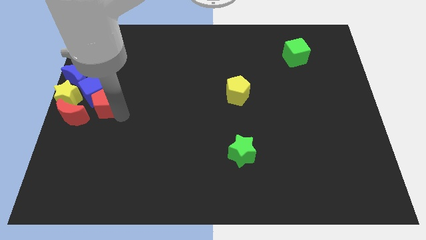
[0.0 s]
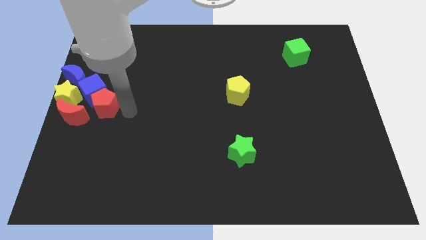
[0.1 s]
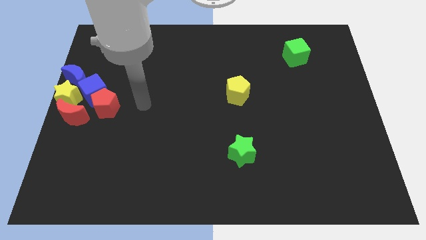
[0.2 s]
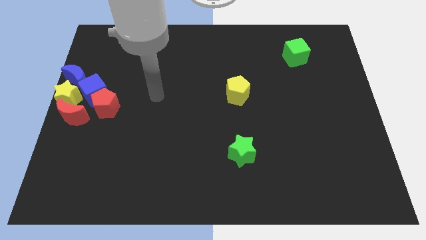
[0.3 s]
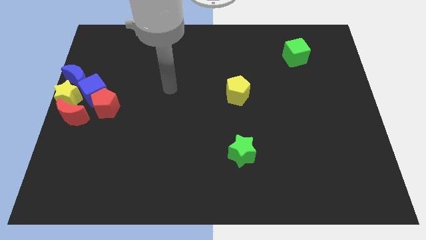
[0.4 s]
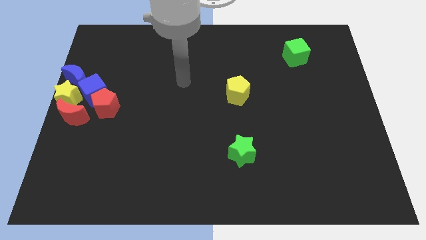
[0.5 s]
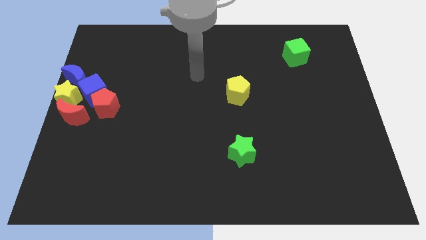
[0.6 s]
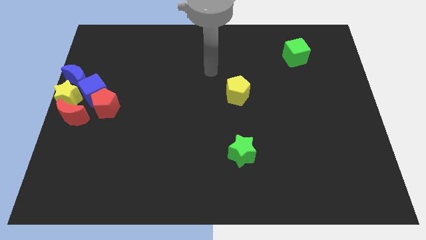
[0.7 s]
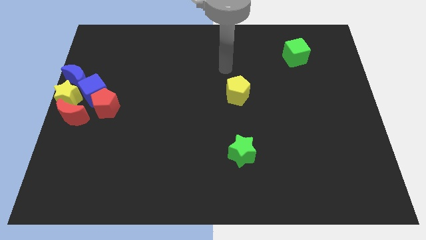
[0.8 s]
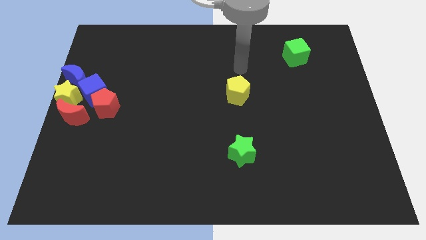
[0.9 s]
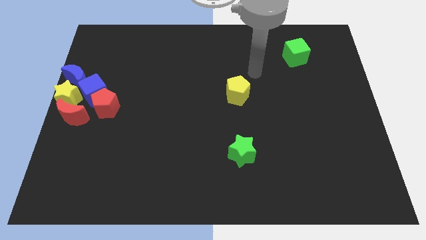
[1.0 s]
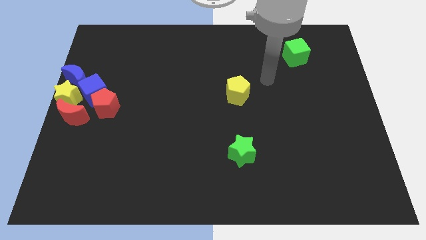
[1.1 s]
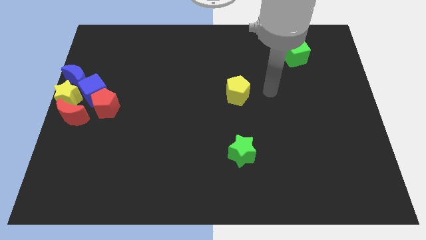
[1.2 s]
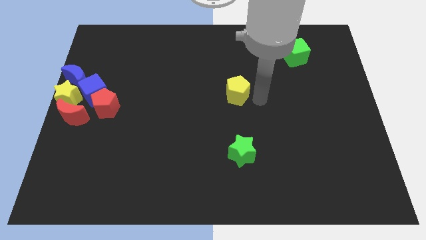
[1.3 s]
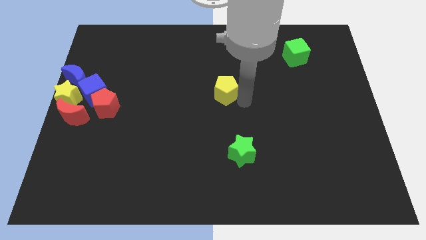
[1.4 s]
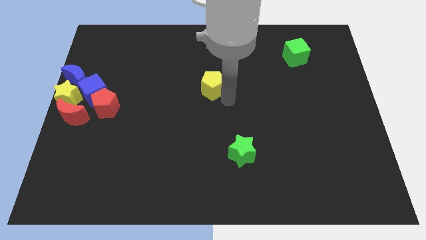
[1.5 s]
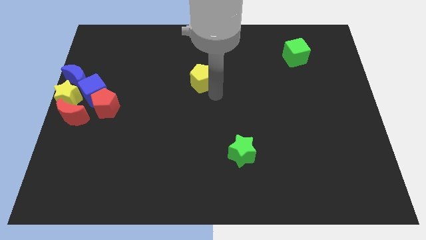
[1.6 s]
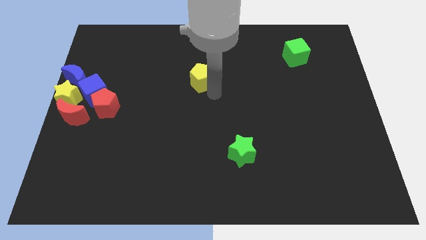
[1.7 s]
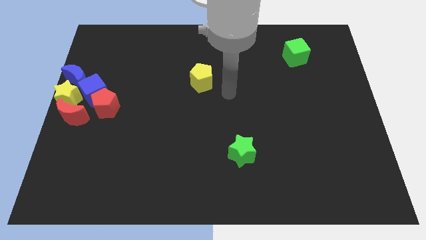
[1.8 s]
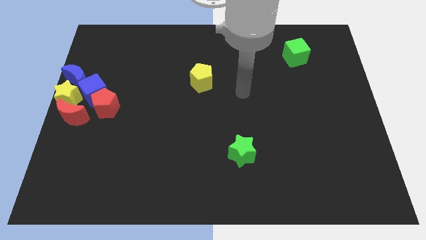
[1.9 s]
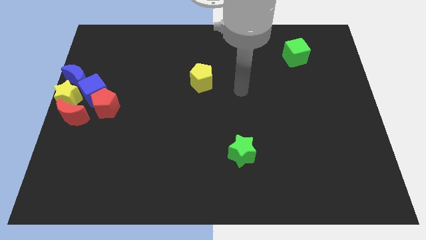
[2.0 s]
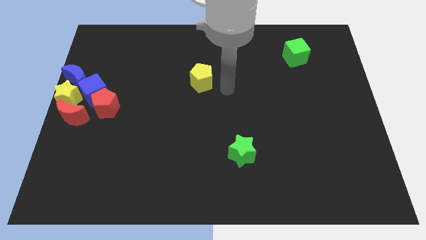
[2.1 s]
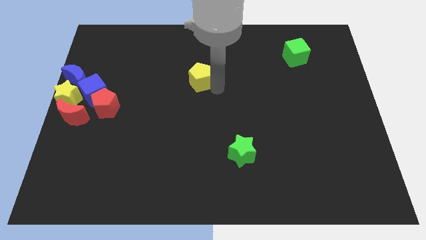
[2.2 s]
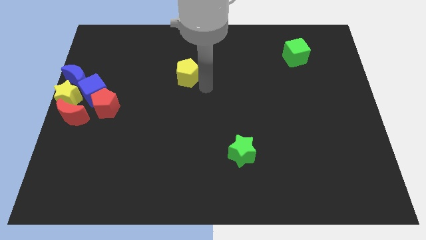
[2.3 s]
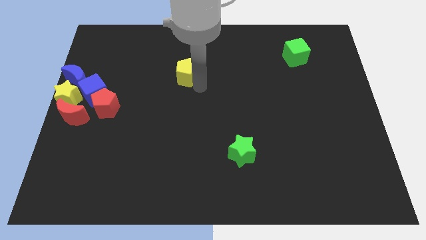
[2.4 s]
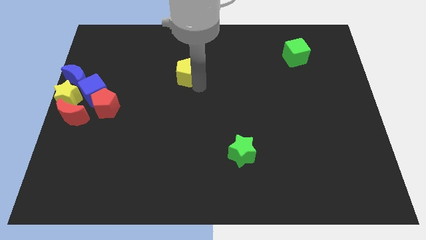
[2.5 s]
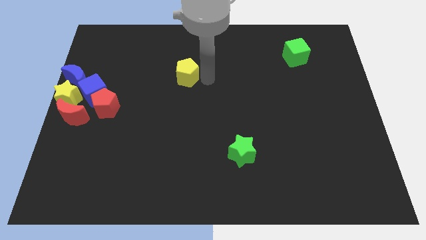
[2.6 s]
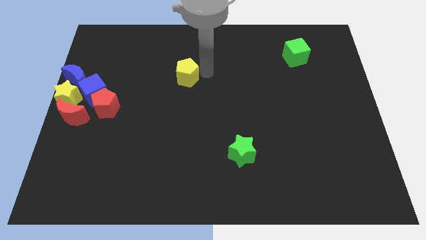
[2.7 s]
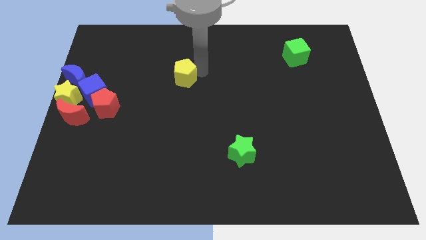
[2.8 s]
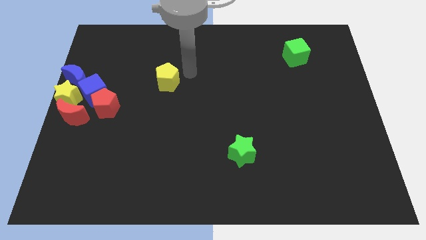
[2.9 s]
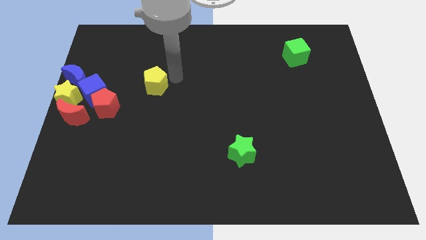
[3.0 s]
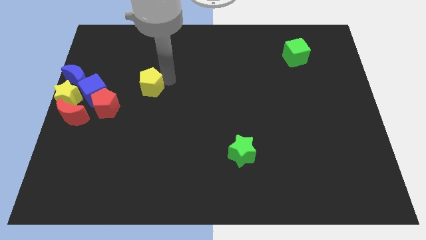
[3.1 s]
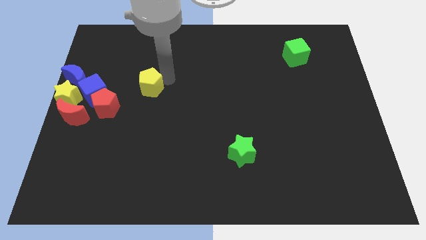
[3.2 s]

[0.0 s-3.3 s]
slide the yellow pentagon towards the left side of the board

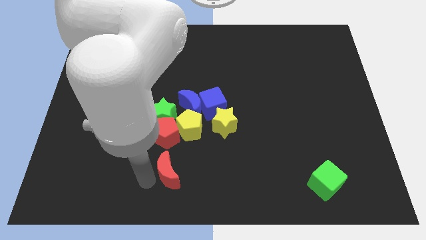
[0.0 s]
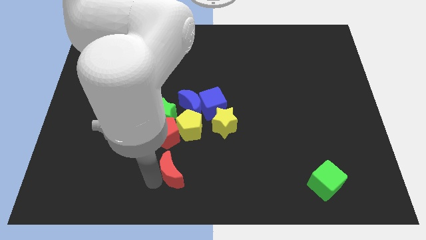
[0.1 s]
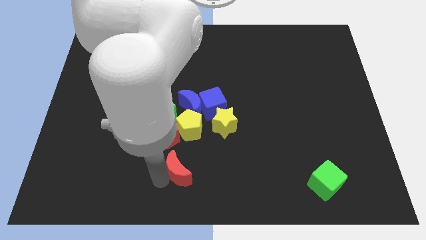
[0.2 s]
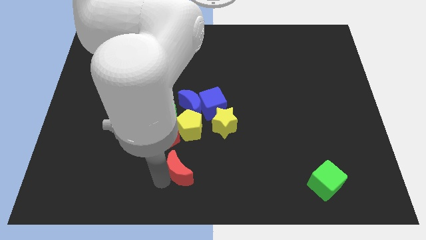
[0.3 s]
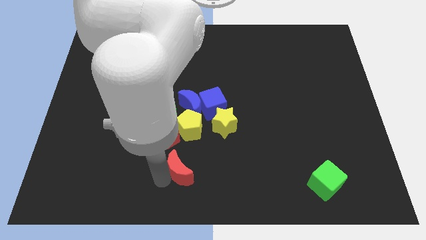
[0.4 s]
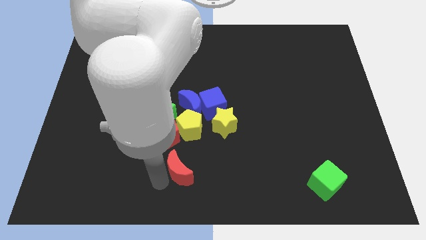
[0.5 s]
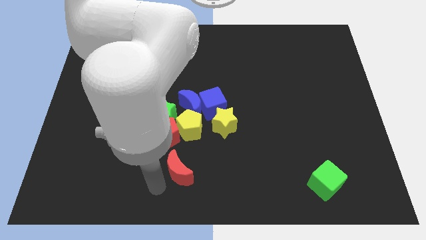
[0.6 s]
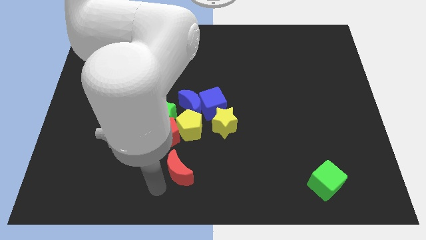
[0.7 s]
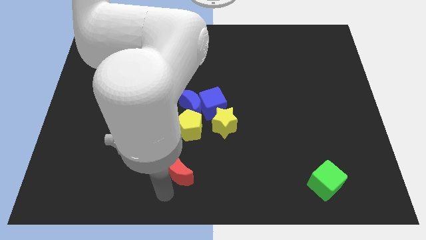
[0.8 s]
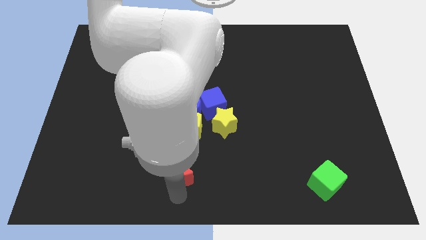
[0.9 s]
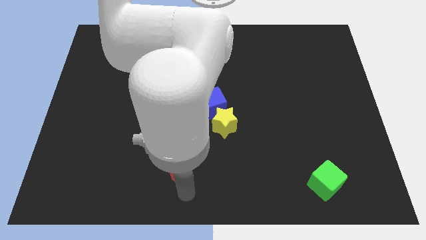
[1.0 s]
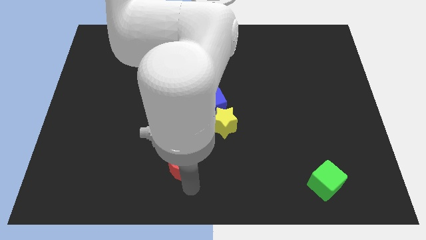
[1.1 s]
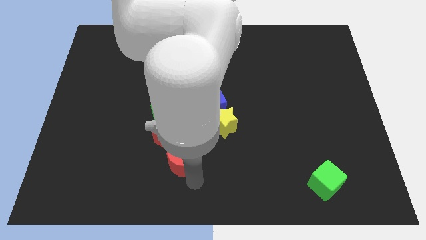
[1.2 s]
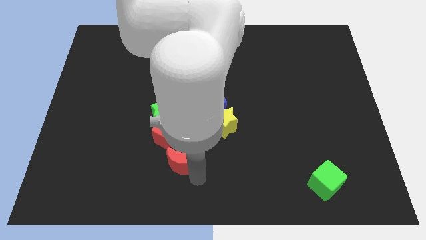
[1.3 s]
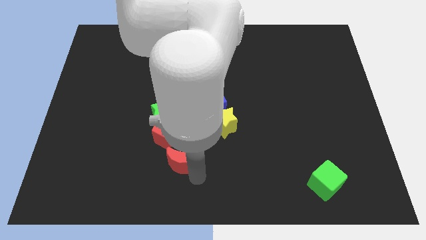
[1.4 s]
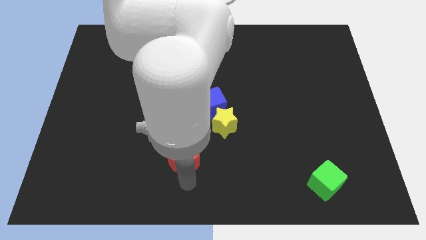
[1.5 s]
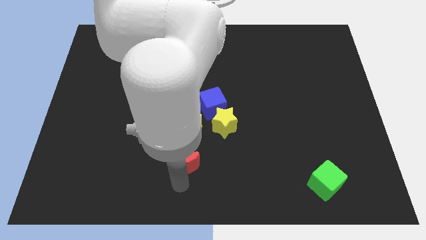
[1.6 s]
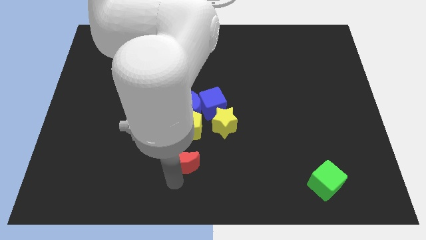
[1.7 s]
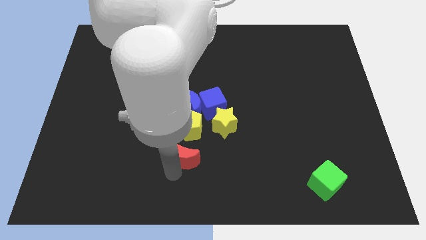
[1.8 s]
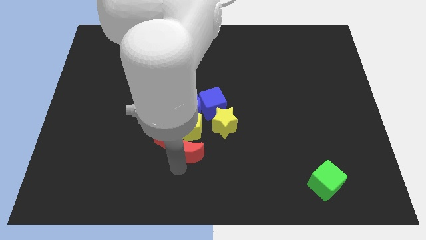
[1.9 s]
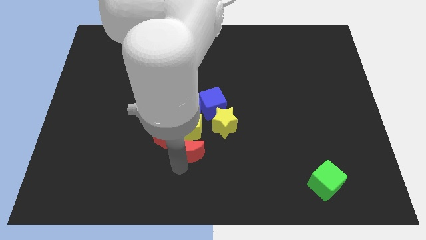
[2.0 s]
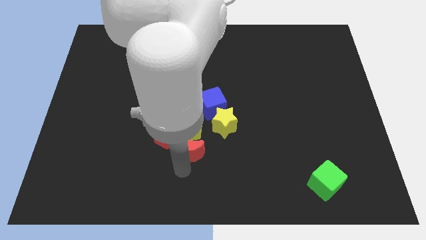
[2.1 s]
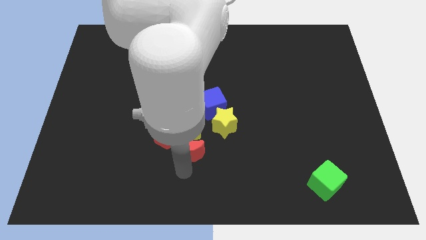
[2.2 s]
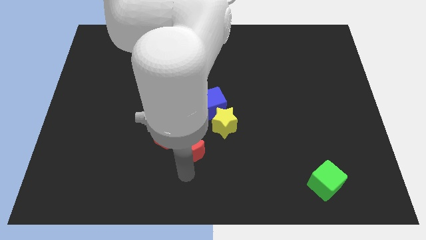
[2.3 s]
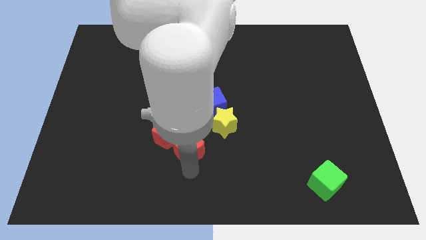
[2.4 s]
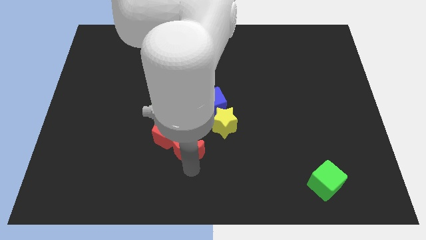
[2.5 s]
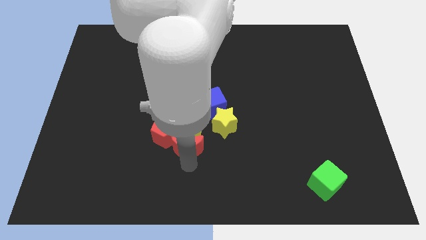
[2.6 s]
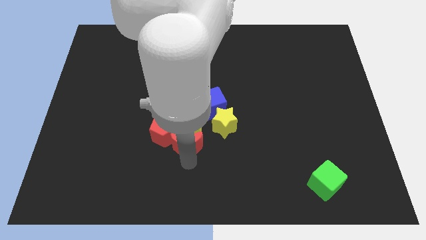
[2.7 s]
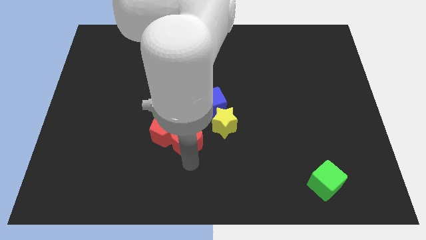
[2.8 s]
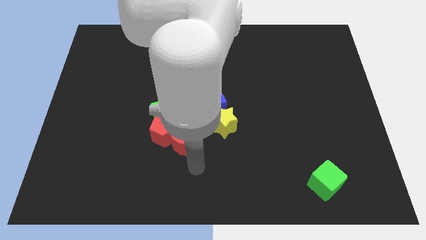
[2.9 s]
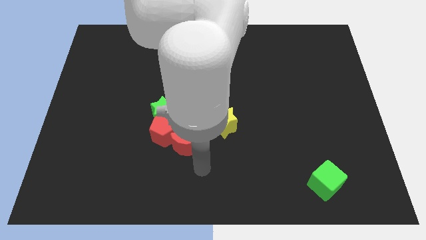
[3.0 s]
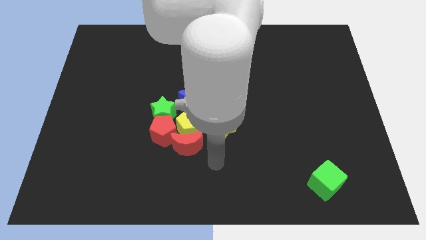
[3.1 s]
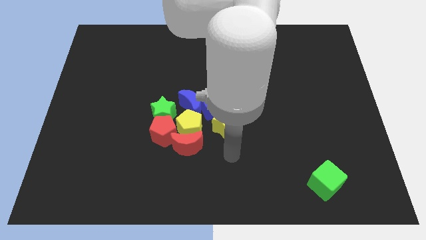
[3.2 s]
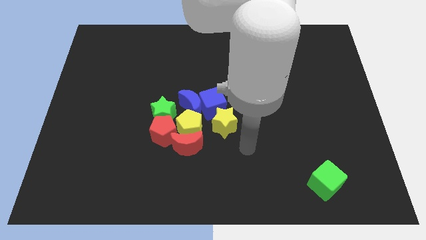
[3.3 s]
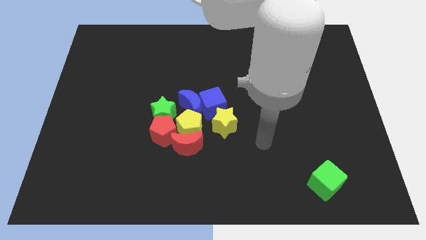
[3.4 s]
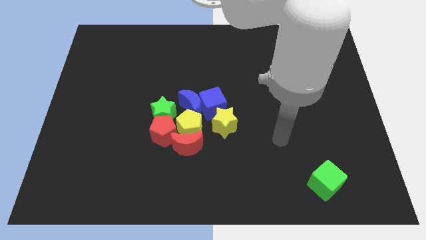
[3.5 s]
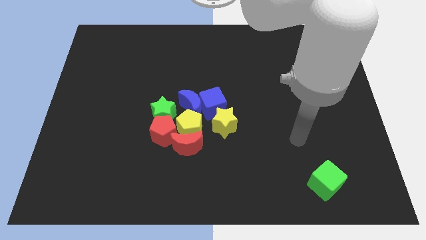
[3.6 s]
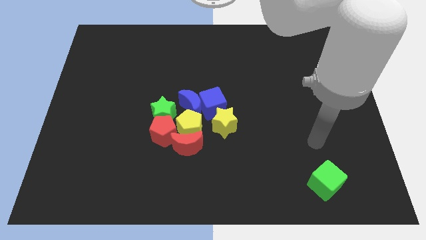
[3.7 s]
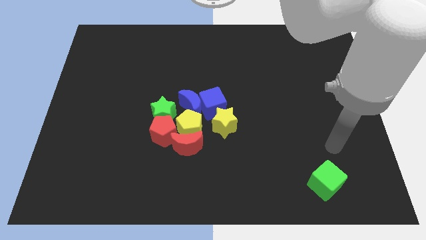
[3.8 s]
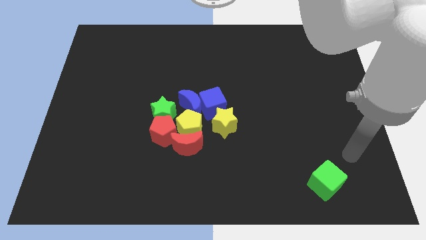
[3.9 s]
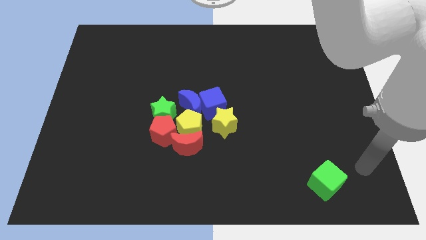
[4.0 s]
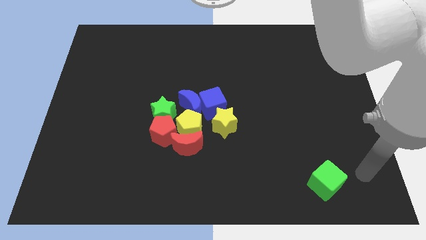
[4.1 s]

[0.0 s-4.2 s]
move the red crescent into group of blocks

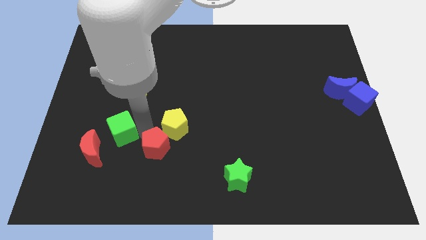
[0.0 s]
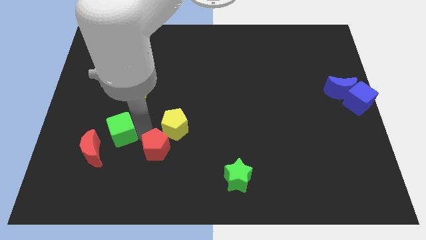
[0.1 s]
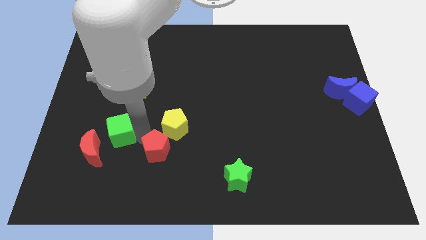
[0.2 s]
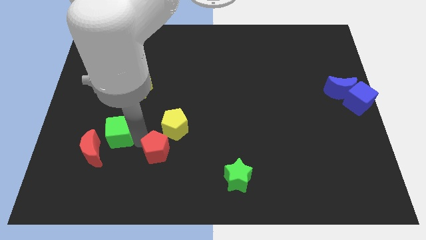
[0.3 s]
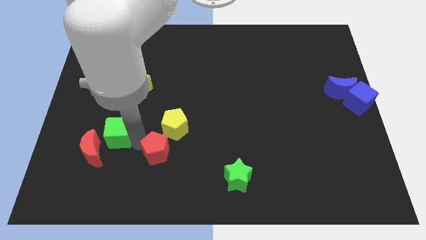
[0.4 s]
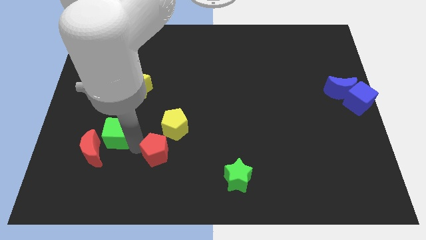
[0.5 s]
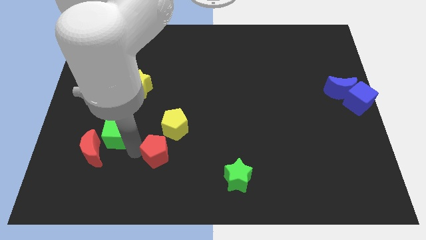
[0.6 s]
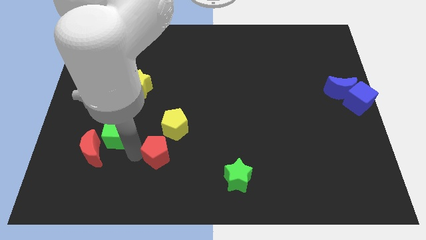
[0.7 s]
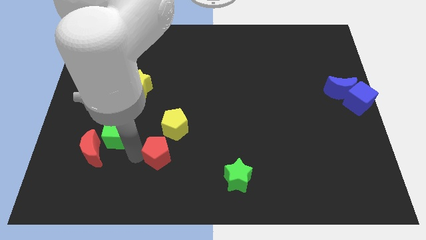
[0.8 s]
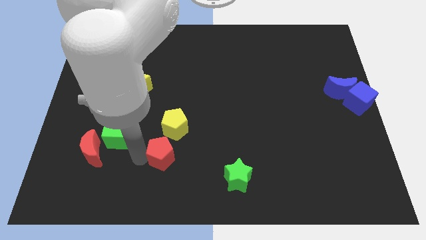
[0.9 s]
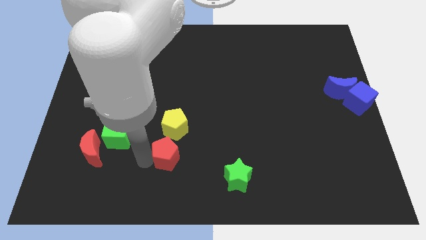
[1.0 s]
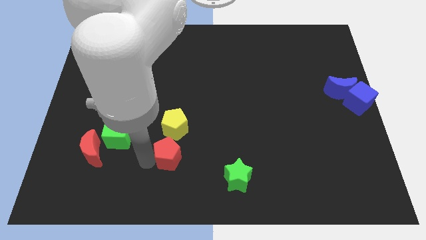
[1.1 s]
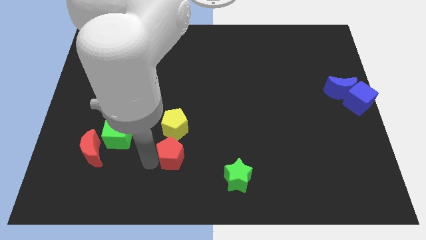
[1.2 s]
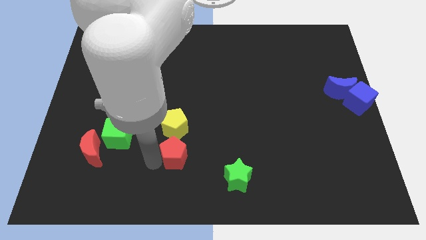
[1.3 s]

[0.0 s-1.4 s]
push the red pentagon to the bottom side of the yellow pentagon

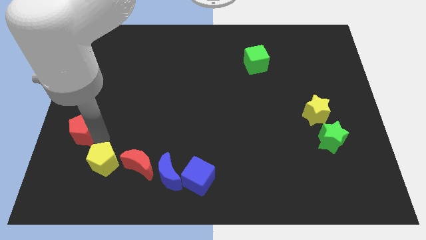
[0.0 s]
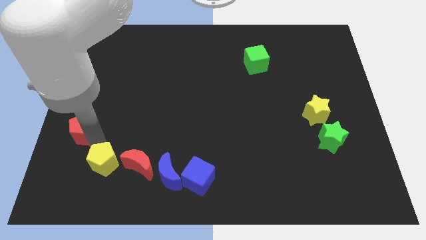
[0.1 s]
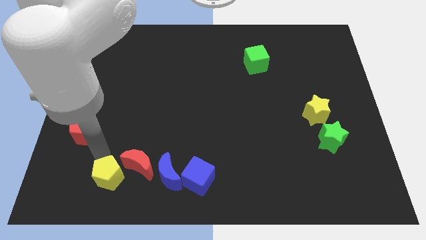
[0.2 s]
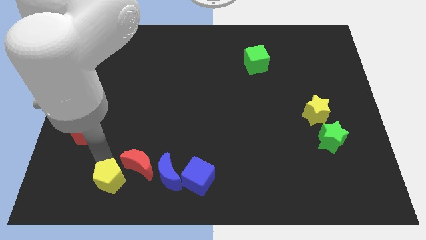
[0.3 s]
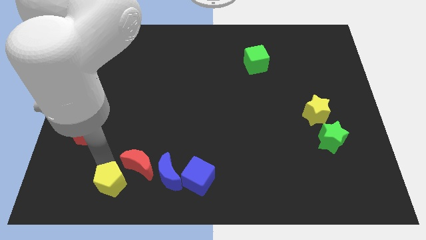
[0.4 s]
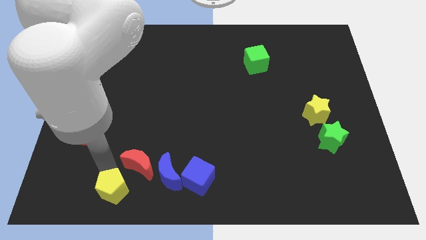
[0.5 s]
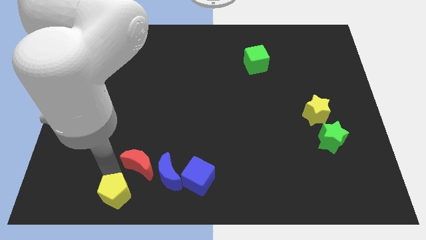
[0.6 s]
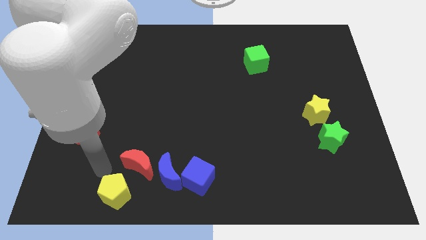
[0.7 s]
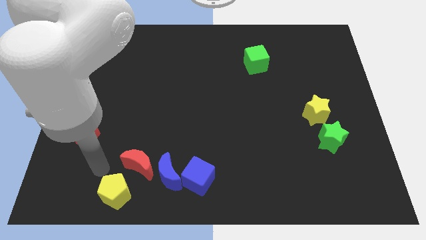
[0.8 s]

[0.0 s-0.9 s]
push the yellow pentagon to the bottom
